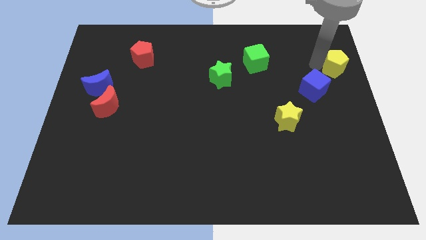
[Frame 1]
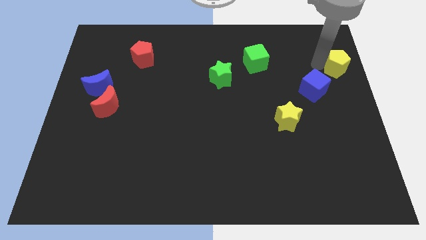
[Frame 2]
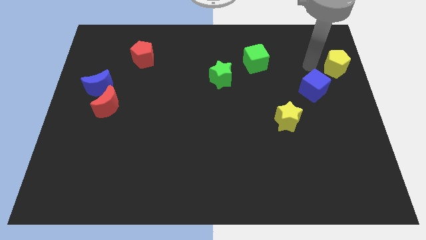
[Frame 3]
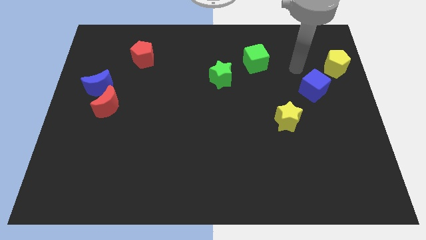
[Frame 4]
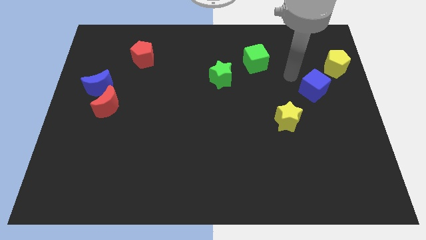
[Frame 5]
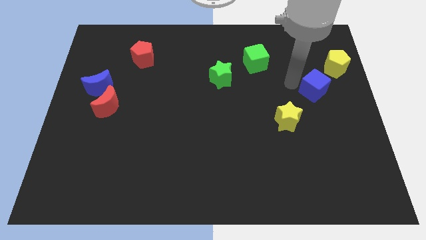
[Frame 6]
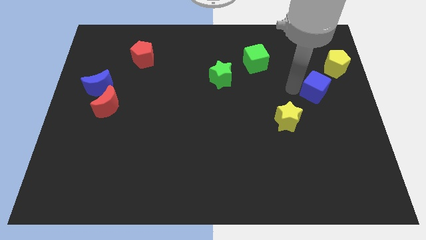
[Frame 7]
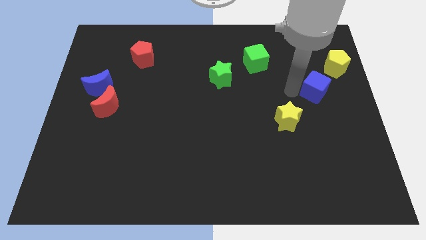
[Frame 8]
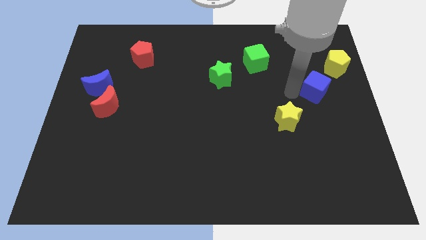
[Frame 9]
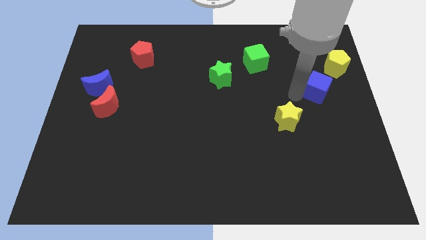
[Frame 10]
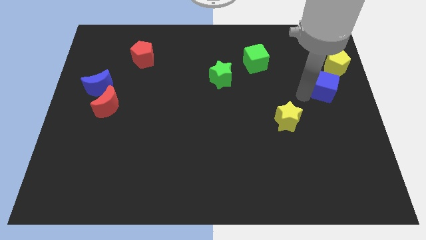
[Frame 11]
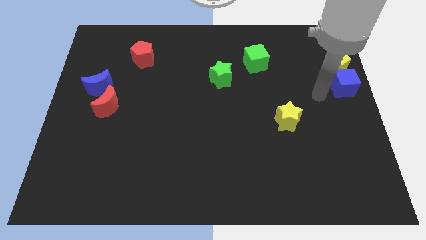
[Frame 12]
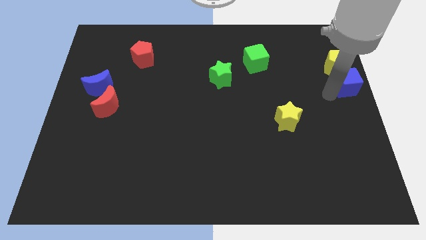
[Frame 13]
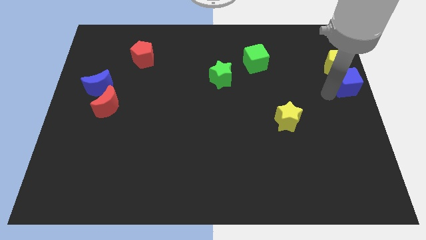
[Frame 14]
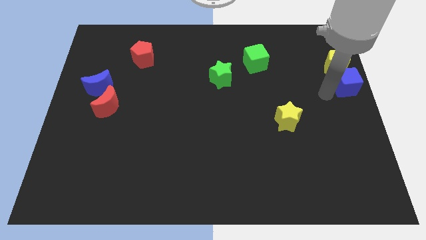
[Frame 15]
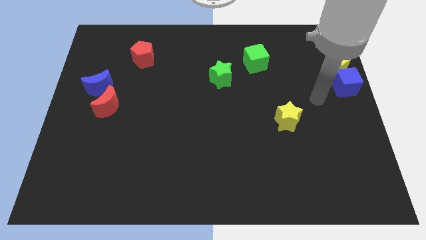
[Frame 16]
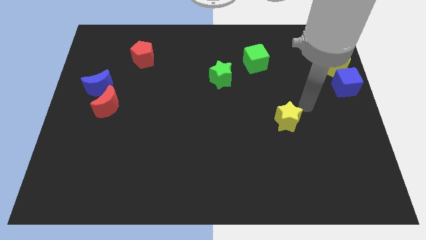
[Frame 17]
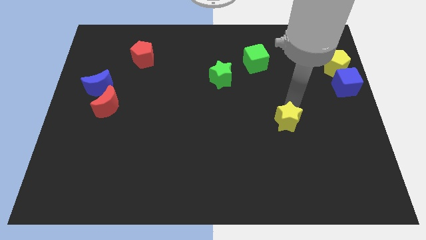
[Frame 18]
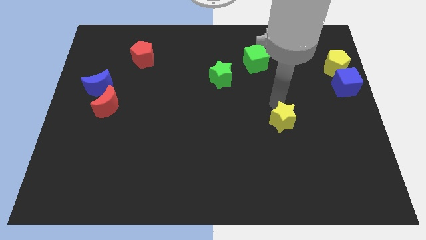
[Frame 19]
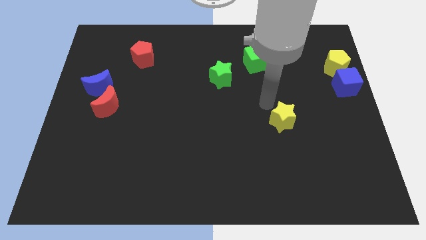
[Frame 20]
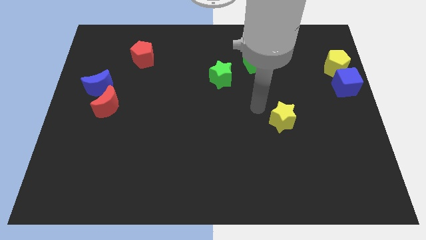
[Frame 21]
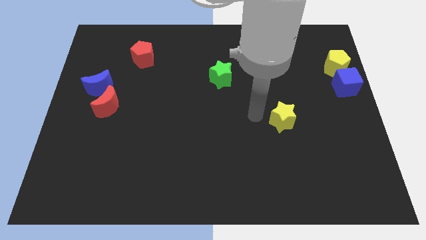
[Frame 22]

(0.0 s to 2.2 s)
push the yellow pentagon and blue cube towards the right side of the board

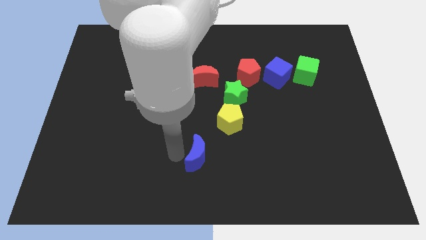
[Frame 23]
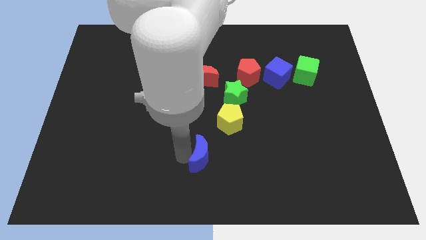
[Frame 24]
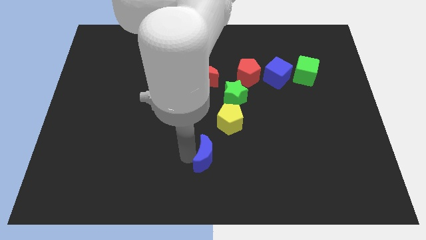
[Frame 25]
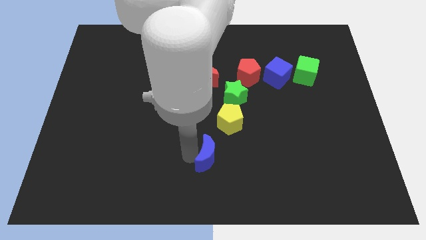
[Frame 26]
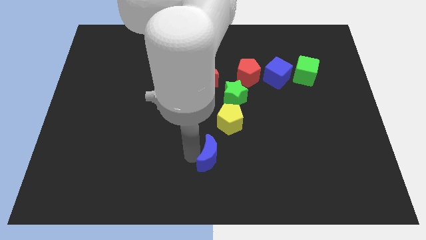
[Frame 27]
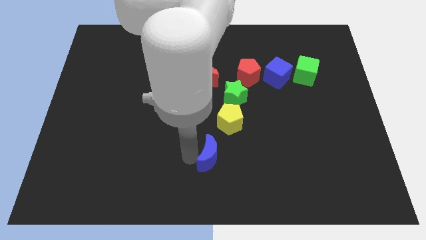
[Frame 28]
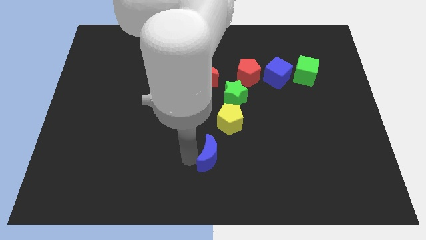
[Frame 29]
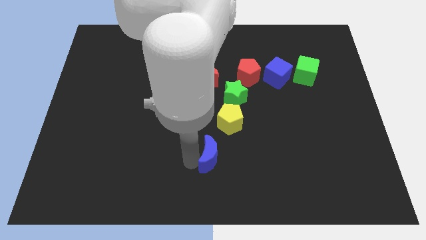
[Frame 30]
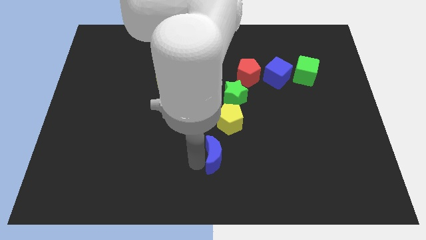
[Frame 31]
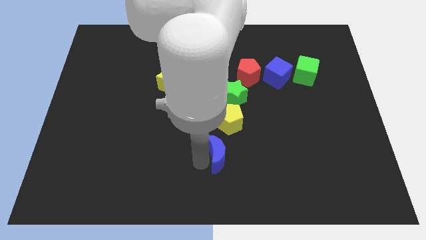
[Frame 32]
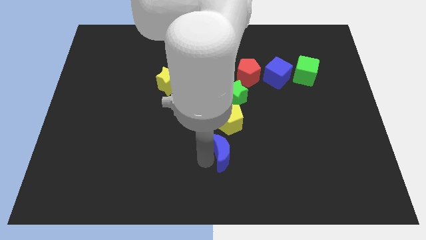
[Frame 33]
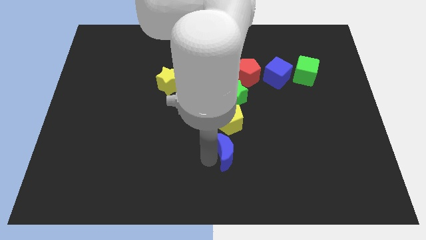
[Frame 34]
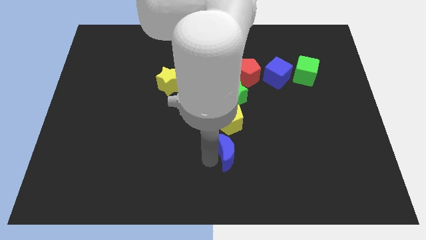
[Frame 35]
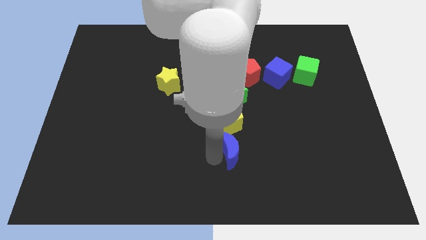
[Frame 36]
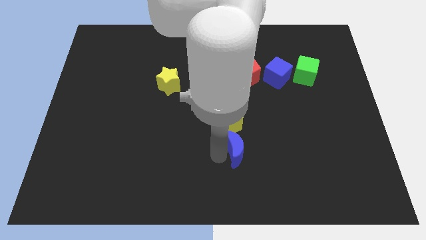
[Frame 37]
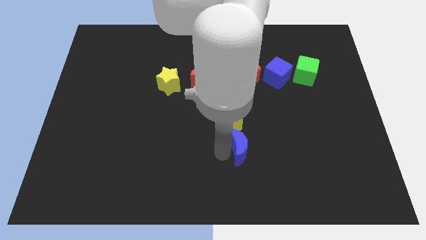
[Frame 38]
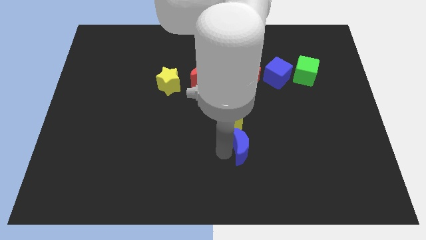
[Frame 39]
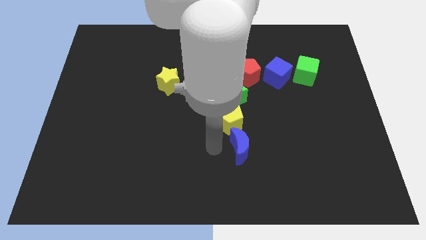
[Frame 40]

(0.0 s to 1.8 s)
place the blue crescent below the yellow pentagon

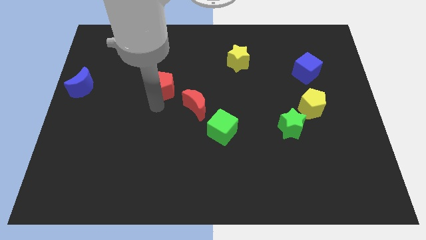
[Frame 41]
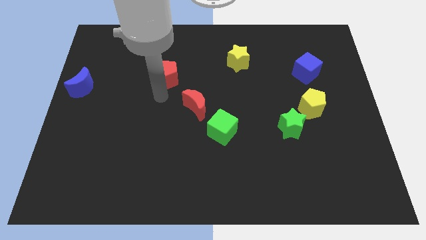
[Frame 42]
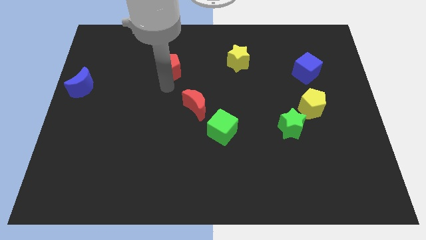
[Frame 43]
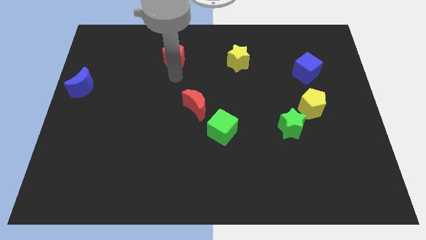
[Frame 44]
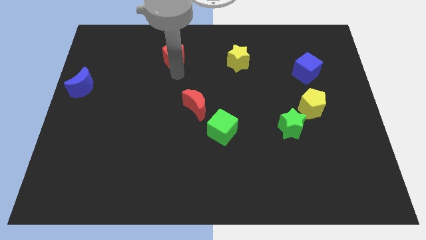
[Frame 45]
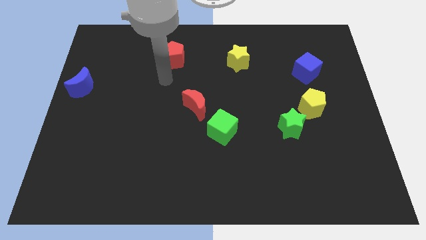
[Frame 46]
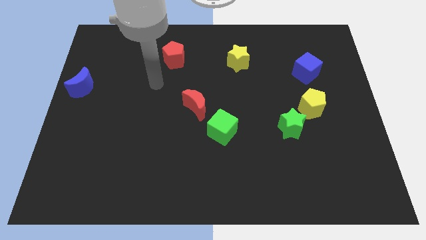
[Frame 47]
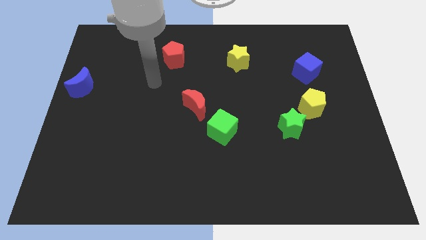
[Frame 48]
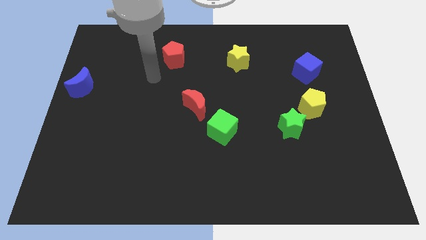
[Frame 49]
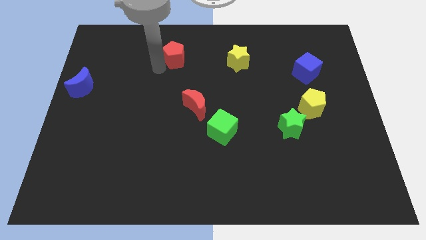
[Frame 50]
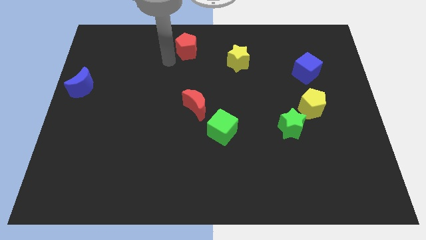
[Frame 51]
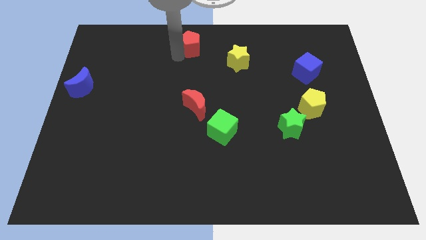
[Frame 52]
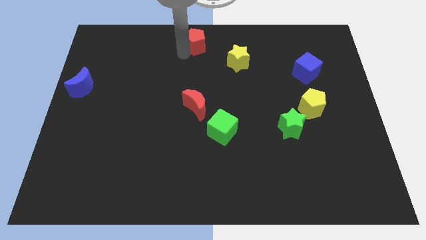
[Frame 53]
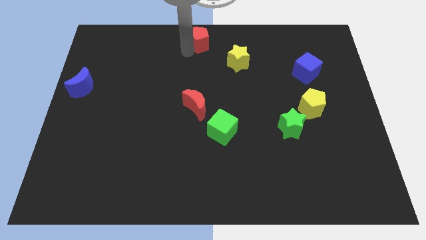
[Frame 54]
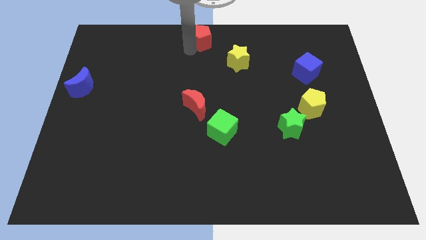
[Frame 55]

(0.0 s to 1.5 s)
put the red pentagon diagonally on the top left side of the yellow star

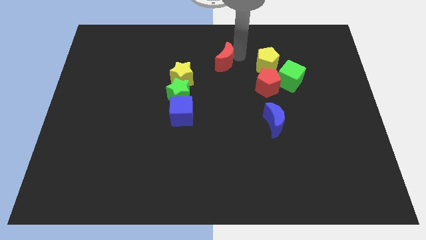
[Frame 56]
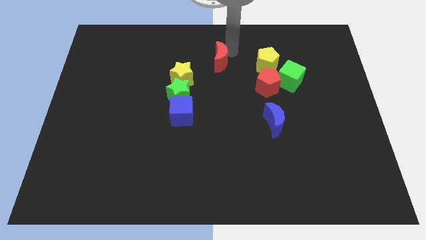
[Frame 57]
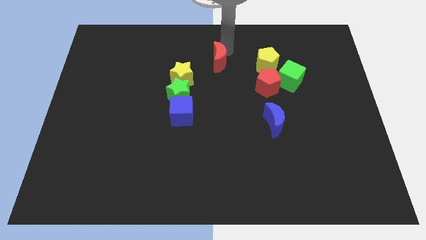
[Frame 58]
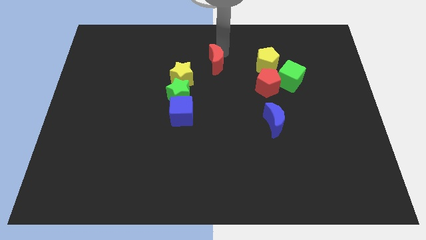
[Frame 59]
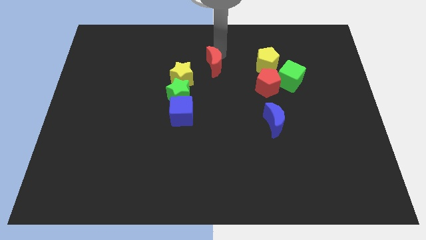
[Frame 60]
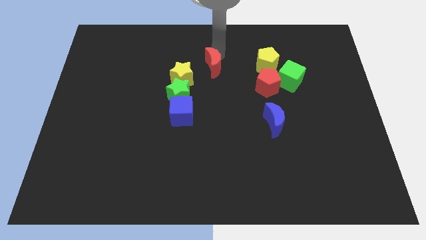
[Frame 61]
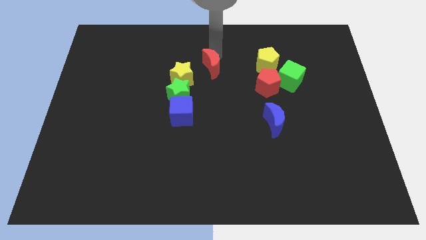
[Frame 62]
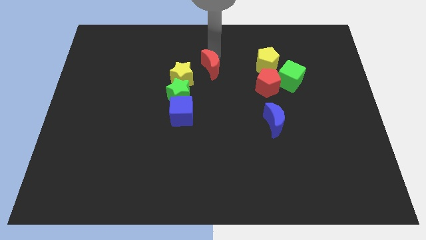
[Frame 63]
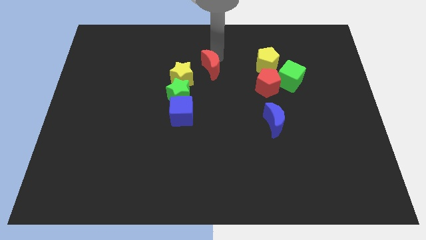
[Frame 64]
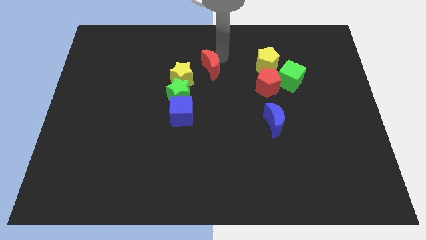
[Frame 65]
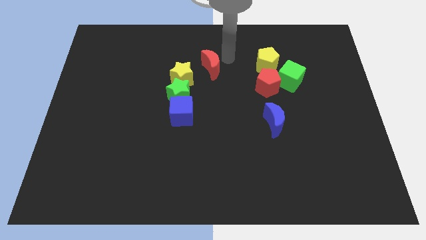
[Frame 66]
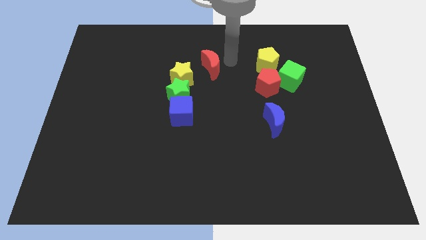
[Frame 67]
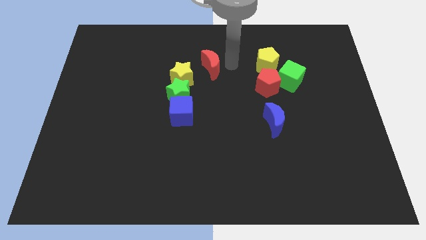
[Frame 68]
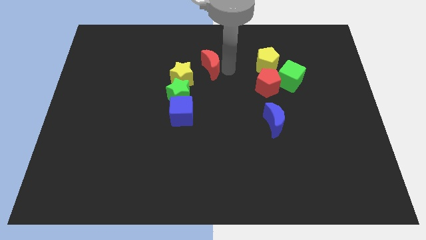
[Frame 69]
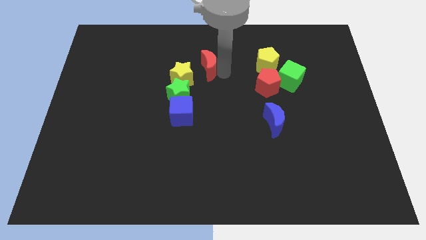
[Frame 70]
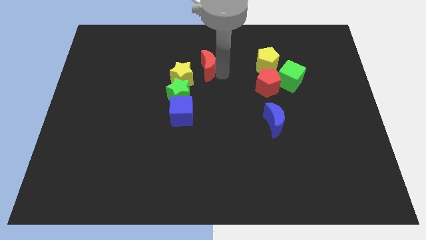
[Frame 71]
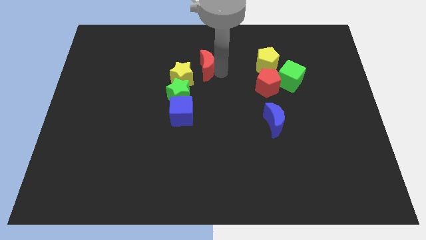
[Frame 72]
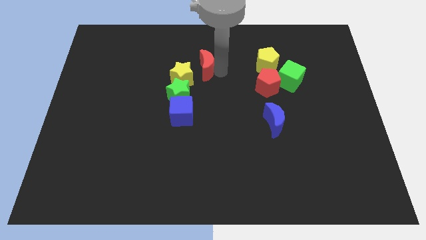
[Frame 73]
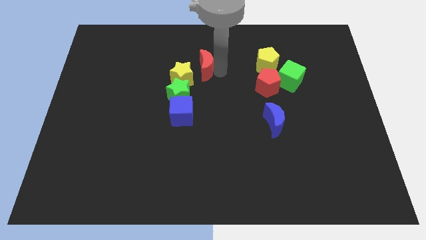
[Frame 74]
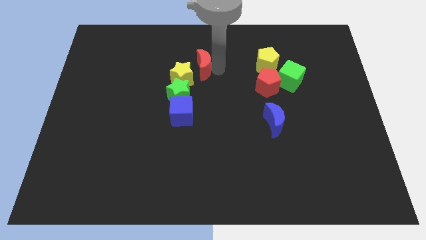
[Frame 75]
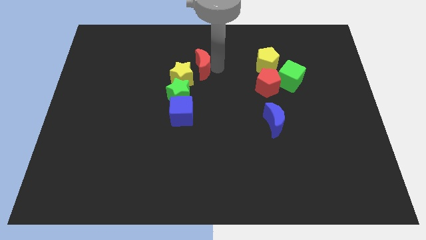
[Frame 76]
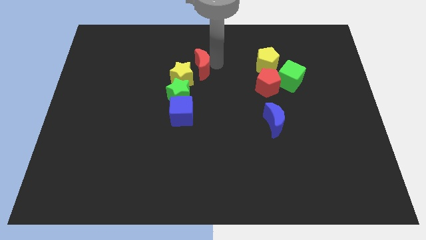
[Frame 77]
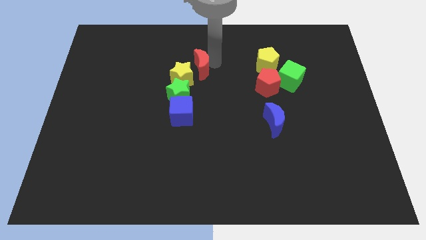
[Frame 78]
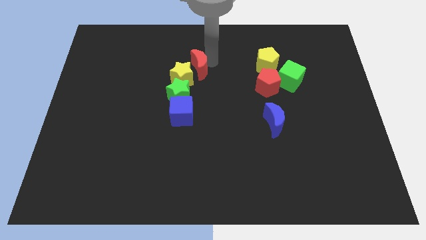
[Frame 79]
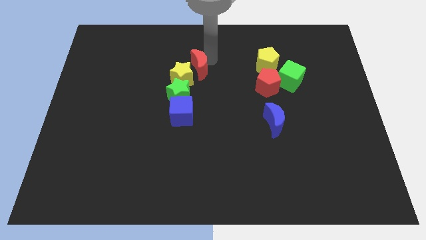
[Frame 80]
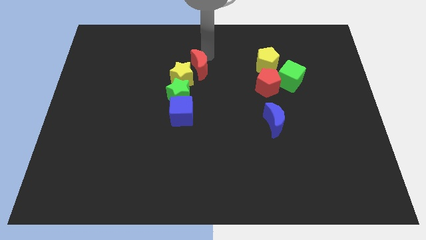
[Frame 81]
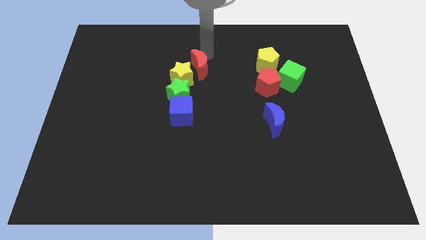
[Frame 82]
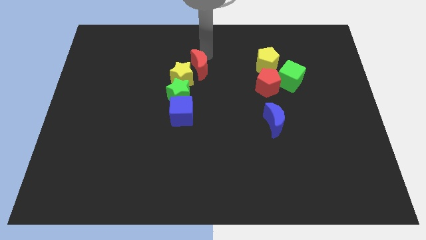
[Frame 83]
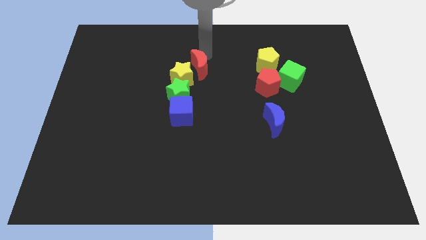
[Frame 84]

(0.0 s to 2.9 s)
move red crescent right to yellow star

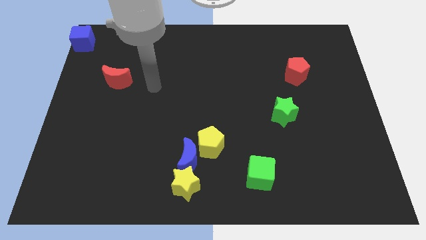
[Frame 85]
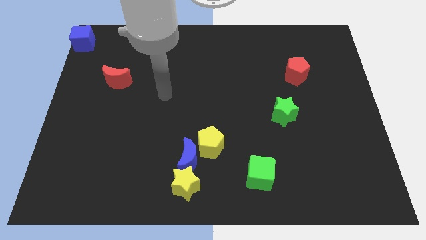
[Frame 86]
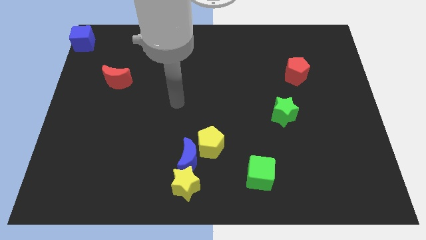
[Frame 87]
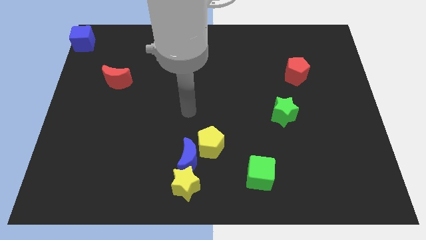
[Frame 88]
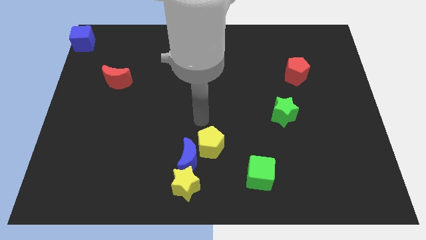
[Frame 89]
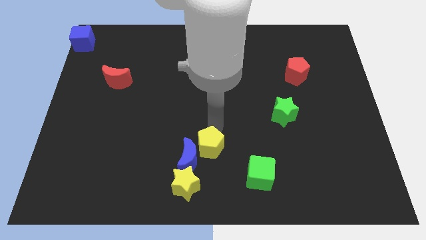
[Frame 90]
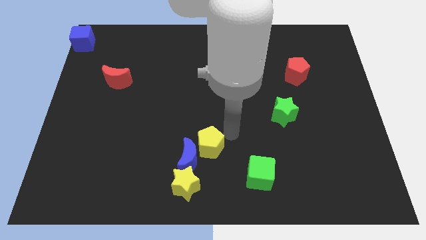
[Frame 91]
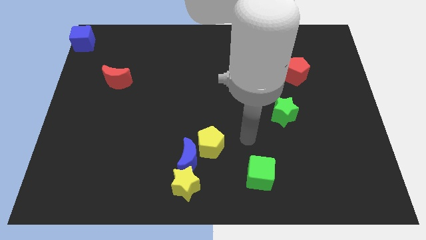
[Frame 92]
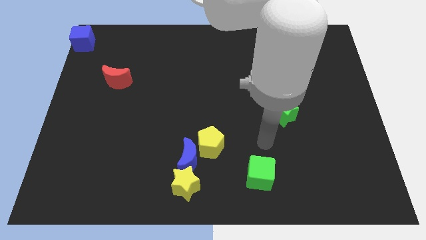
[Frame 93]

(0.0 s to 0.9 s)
move your hand in between the two green blocks
